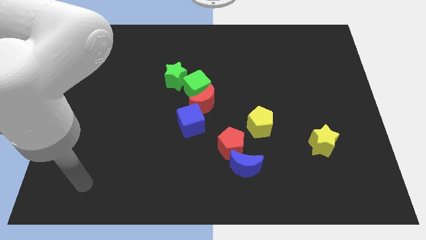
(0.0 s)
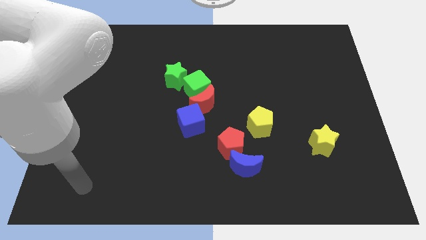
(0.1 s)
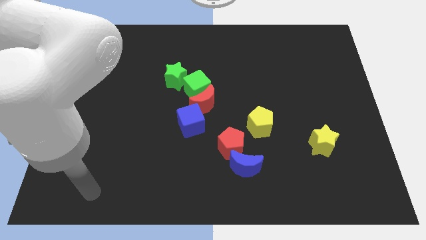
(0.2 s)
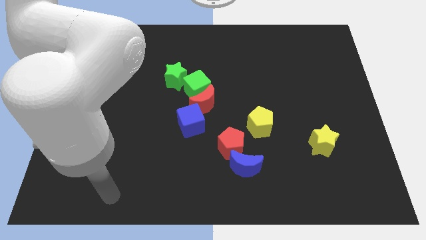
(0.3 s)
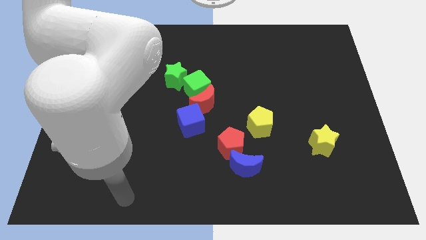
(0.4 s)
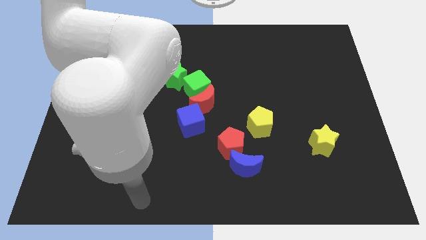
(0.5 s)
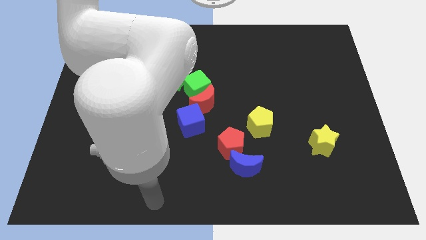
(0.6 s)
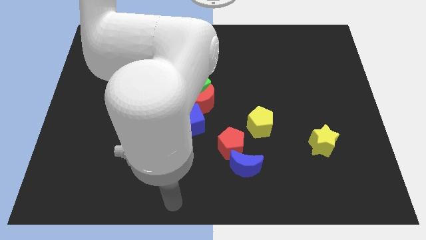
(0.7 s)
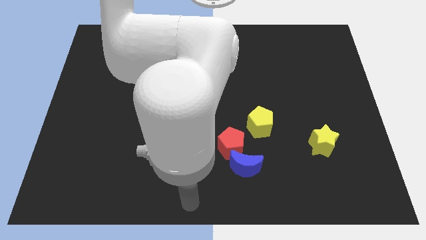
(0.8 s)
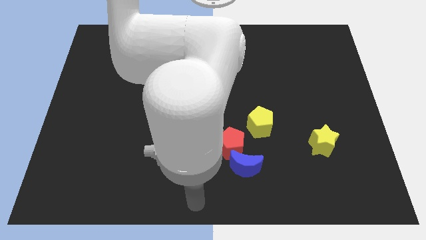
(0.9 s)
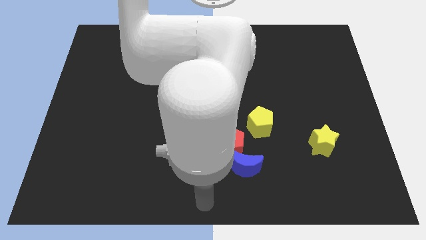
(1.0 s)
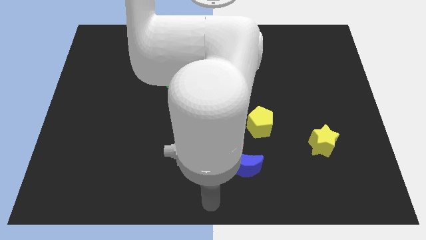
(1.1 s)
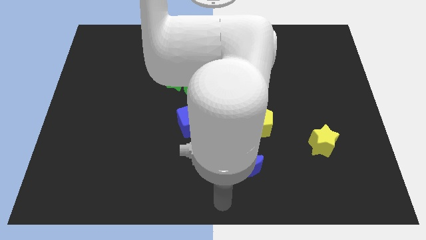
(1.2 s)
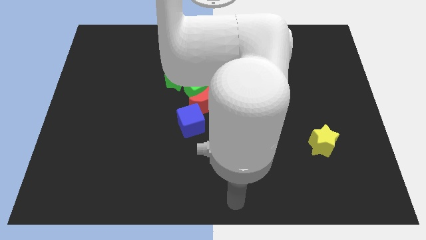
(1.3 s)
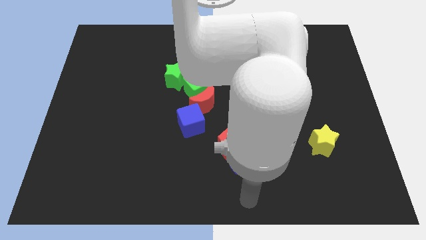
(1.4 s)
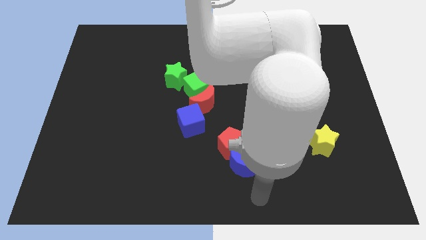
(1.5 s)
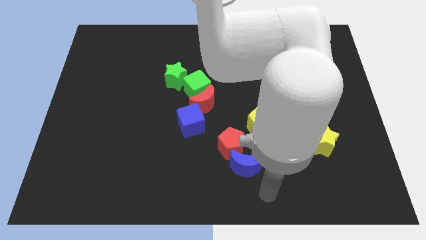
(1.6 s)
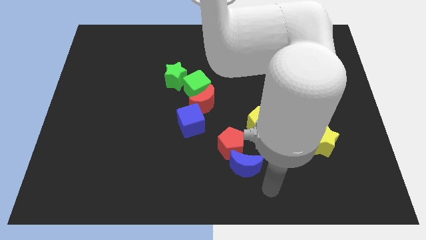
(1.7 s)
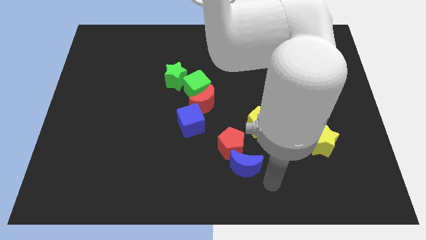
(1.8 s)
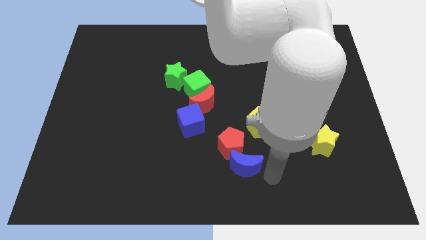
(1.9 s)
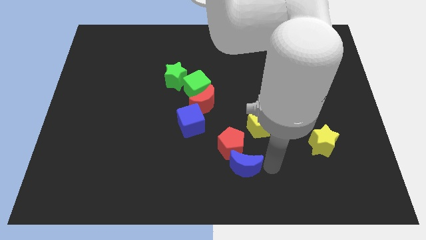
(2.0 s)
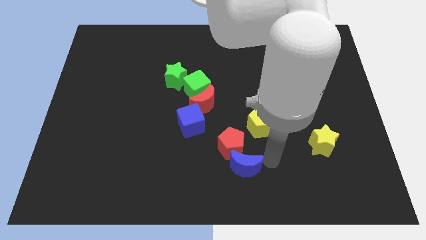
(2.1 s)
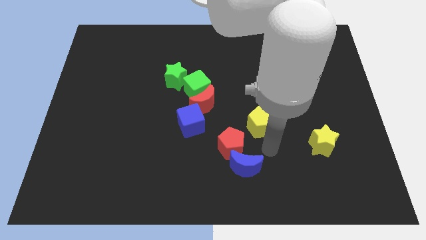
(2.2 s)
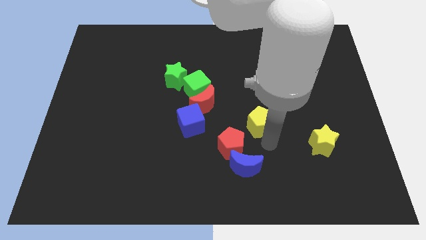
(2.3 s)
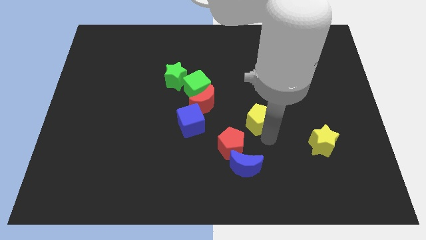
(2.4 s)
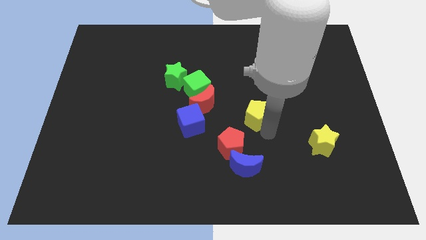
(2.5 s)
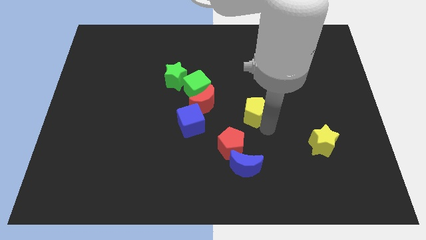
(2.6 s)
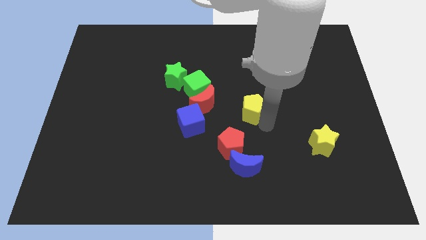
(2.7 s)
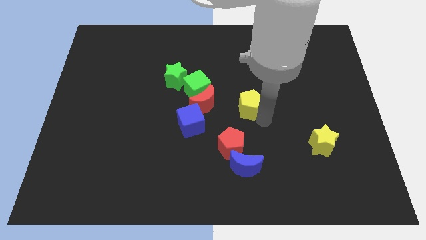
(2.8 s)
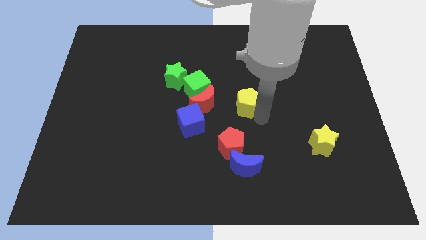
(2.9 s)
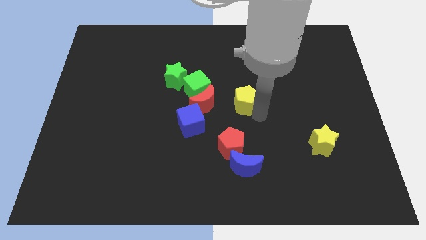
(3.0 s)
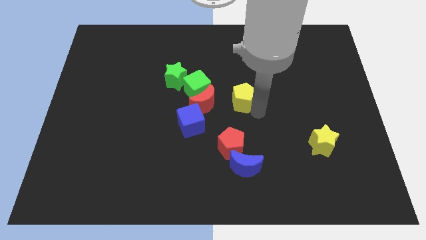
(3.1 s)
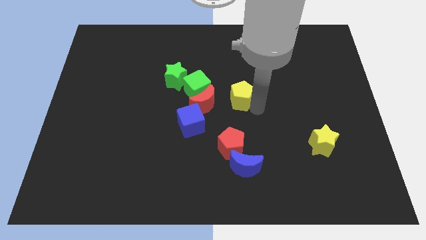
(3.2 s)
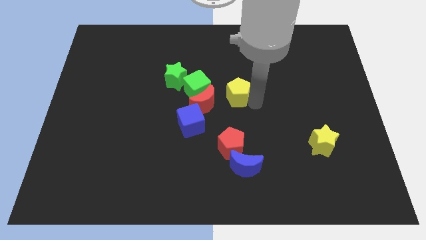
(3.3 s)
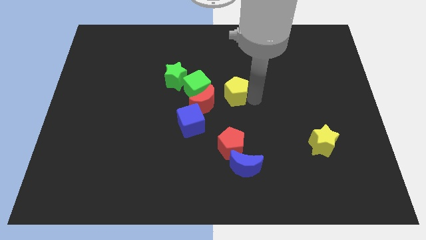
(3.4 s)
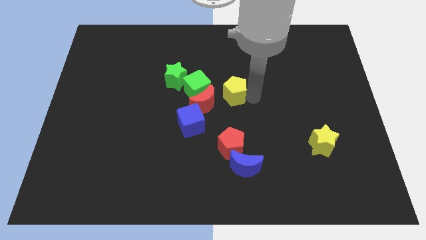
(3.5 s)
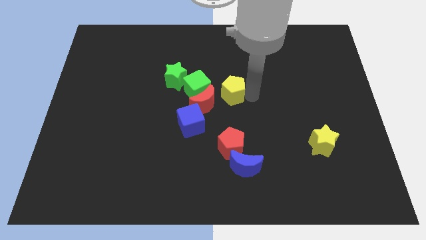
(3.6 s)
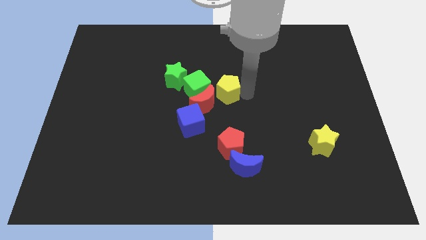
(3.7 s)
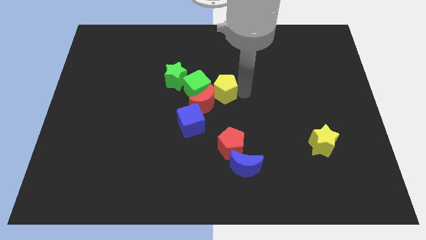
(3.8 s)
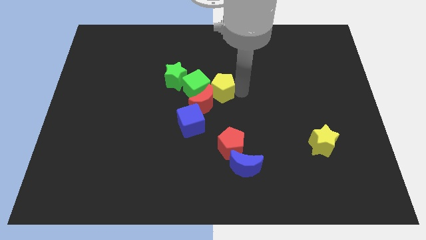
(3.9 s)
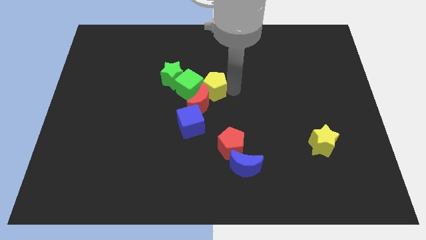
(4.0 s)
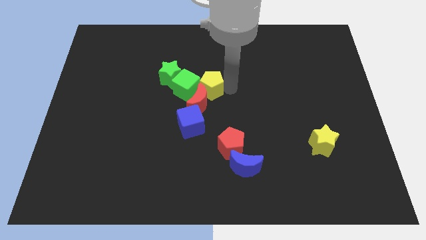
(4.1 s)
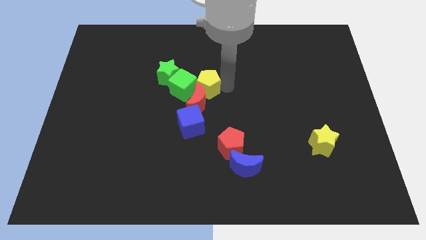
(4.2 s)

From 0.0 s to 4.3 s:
push the yellow pentagon to the green cube

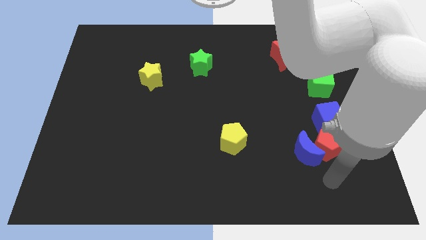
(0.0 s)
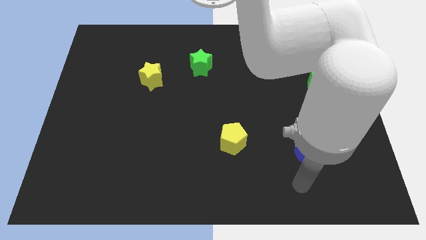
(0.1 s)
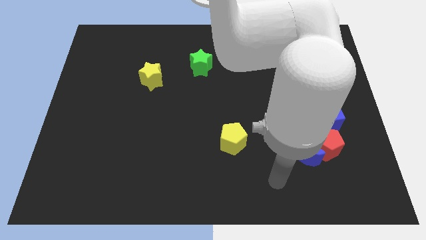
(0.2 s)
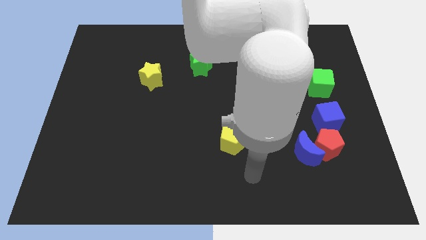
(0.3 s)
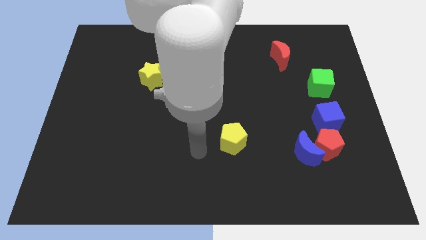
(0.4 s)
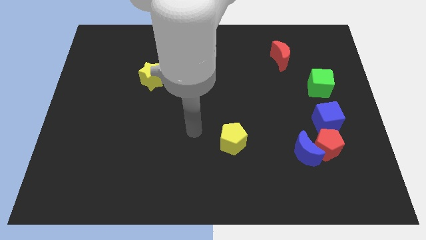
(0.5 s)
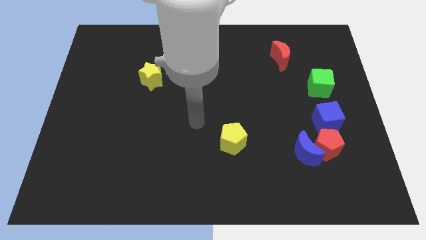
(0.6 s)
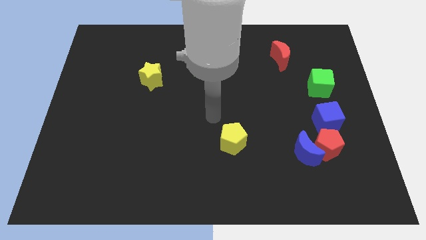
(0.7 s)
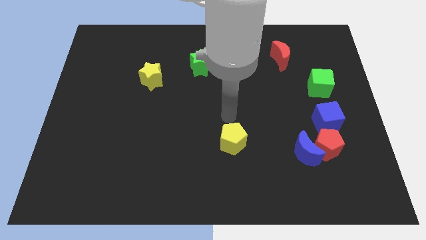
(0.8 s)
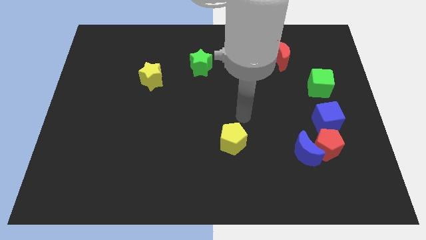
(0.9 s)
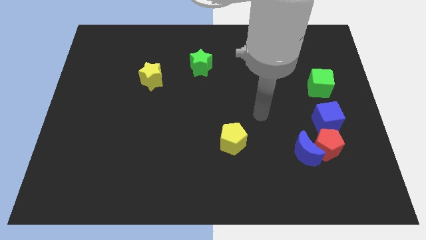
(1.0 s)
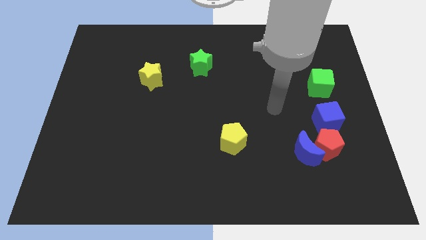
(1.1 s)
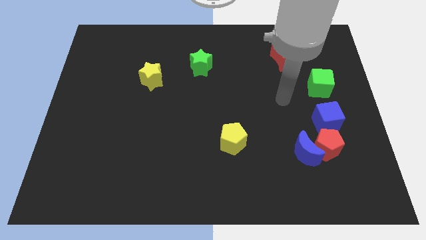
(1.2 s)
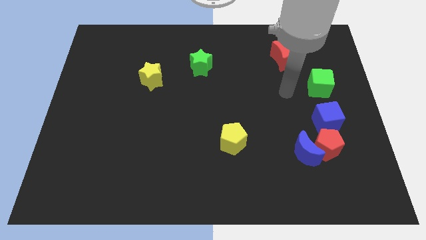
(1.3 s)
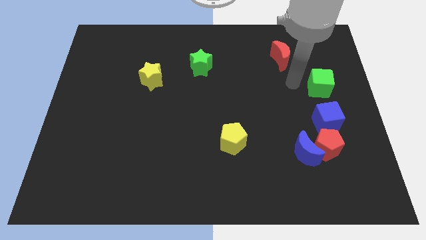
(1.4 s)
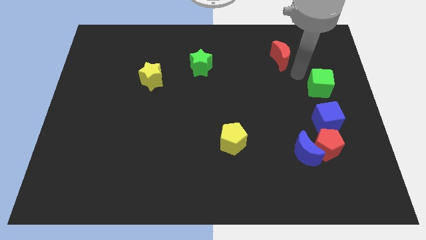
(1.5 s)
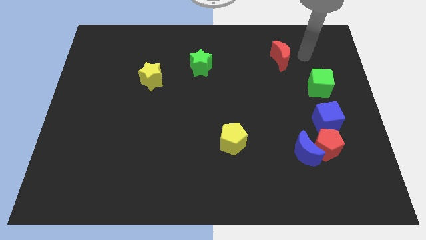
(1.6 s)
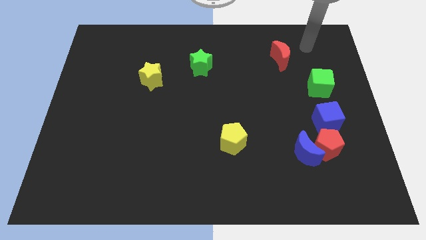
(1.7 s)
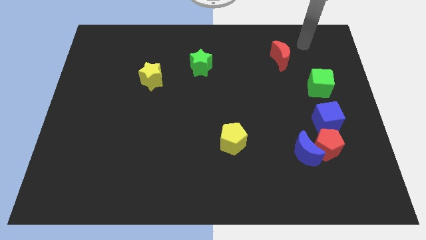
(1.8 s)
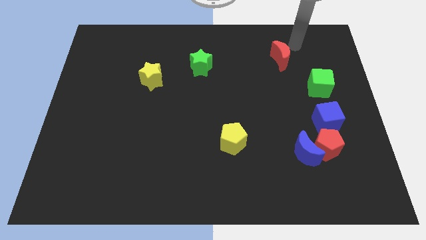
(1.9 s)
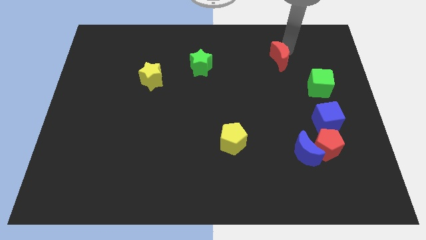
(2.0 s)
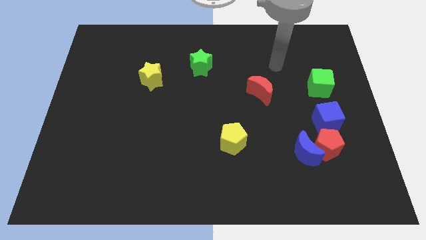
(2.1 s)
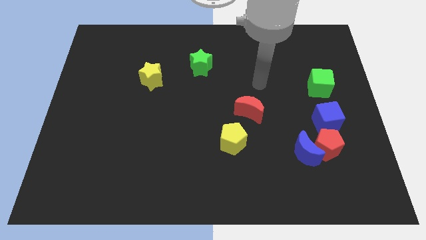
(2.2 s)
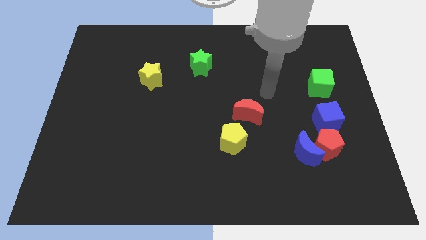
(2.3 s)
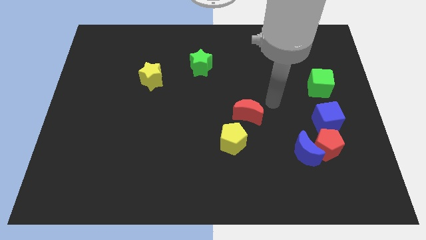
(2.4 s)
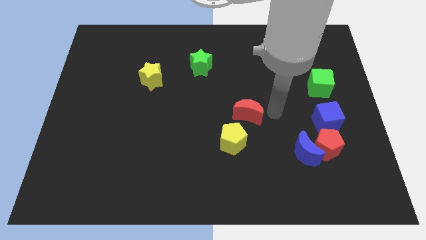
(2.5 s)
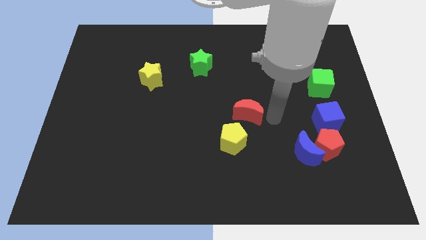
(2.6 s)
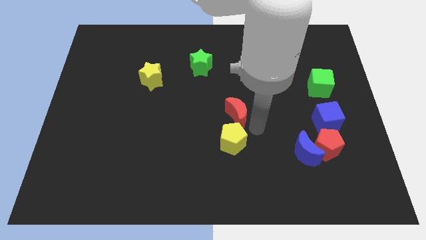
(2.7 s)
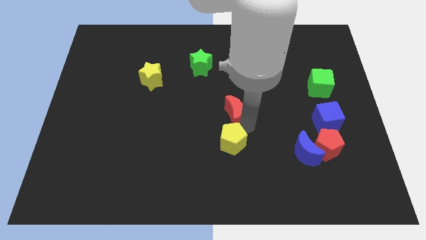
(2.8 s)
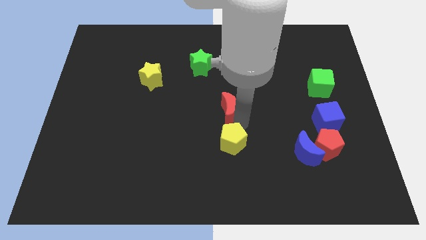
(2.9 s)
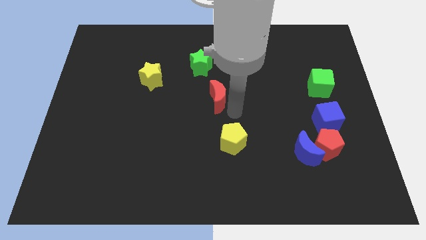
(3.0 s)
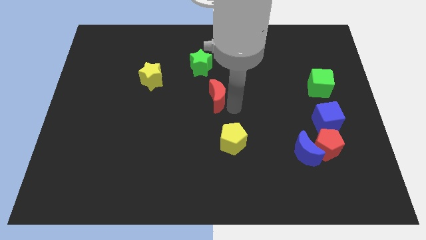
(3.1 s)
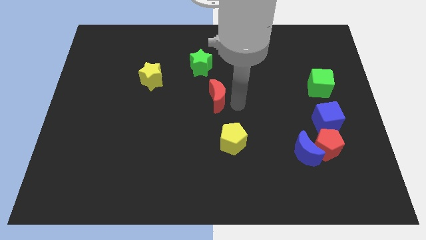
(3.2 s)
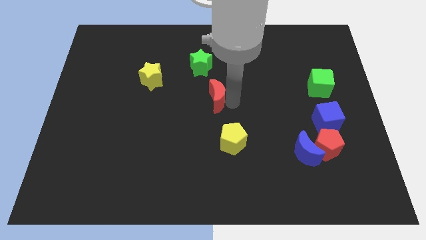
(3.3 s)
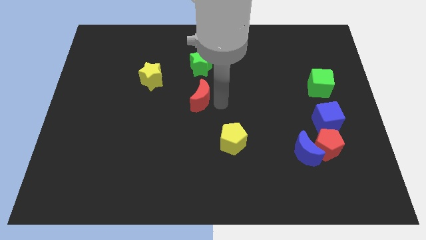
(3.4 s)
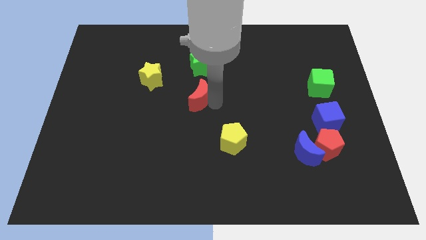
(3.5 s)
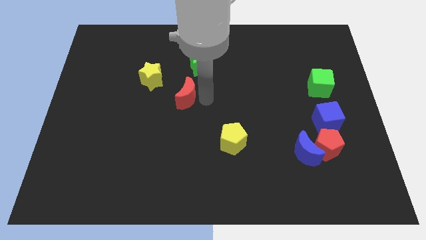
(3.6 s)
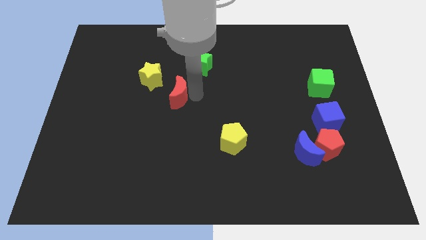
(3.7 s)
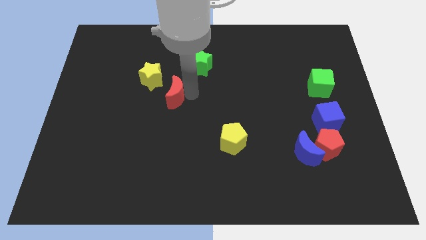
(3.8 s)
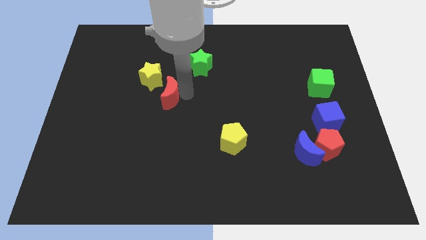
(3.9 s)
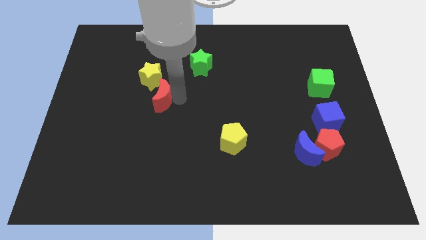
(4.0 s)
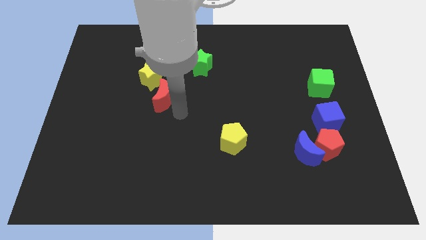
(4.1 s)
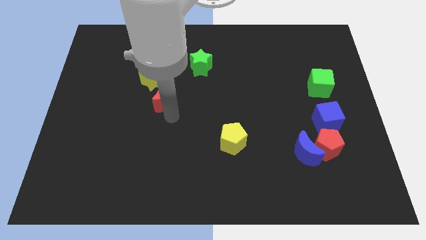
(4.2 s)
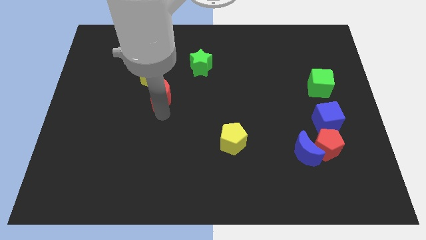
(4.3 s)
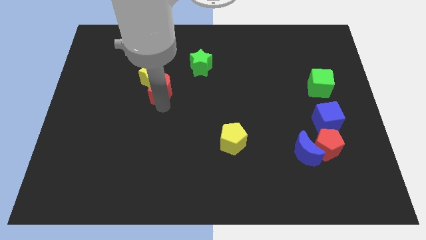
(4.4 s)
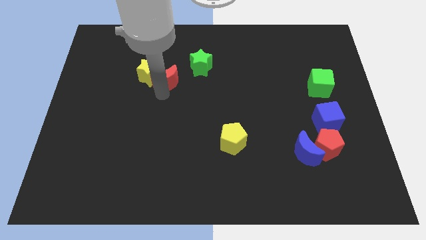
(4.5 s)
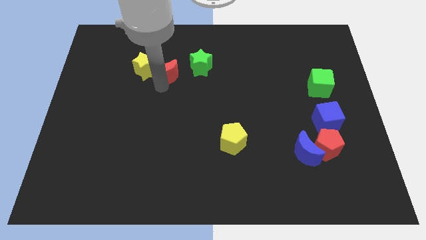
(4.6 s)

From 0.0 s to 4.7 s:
move the red moon next to the yellow star
